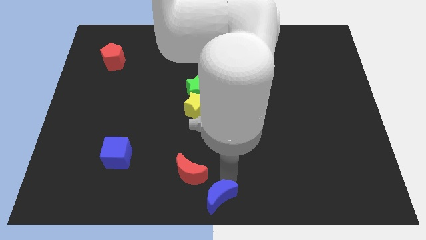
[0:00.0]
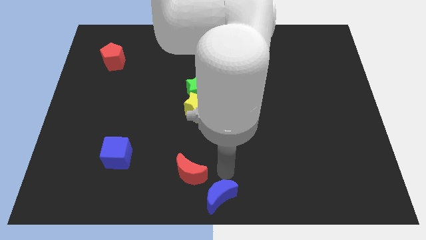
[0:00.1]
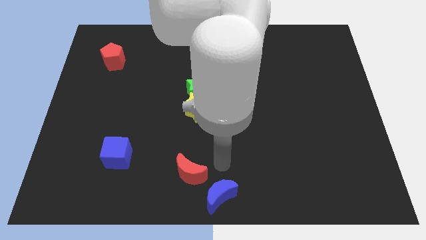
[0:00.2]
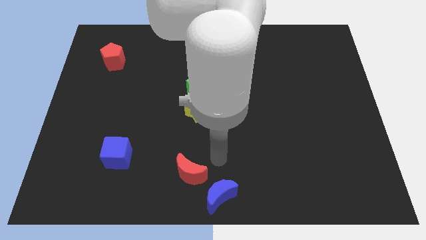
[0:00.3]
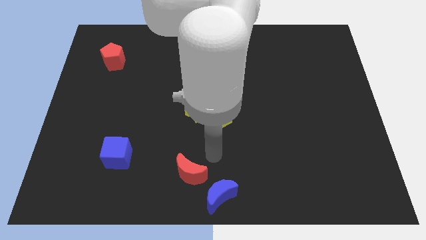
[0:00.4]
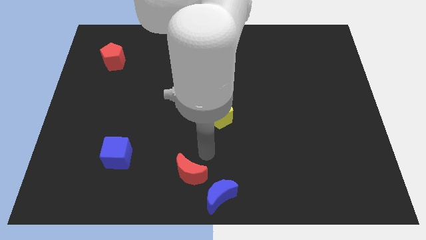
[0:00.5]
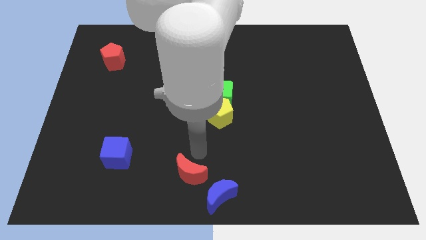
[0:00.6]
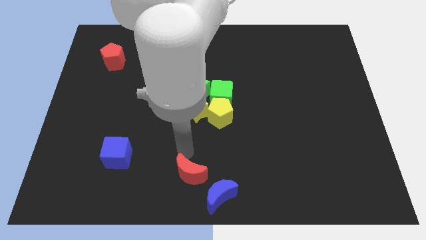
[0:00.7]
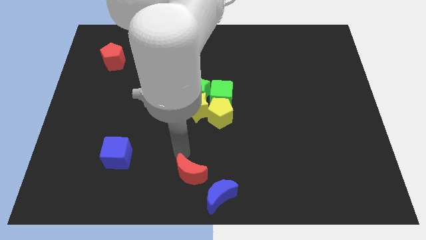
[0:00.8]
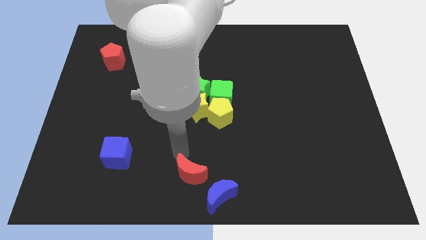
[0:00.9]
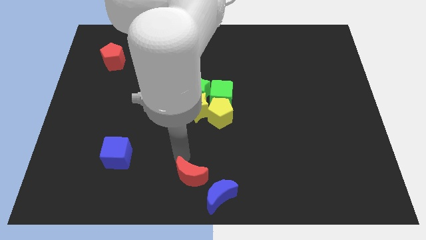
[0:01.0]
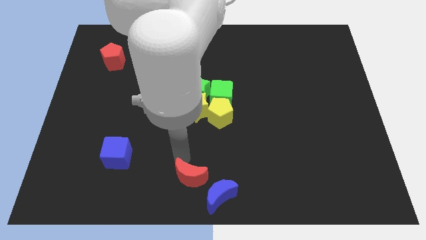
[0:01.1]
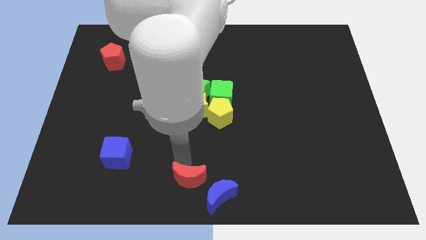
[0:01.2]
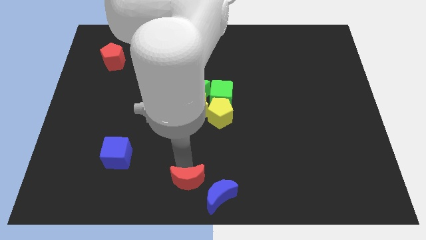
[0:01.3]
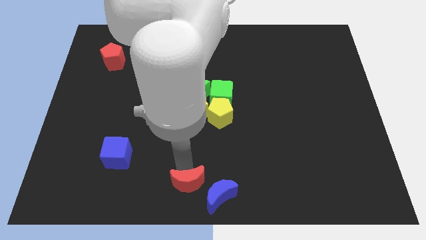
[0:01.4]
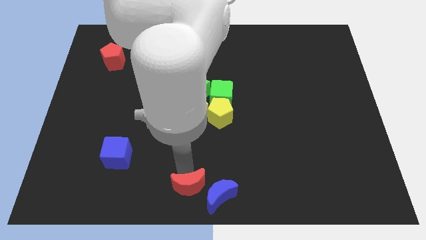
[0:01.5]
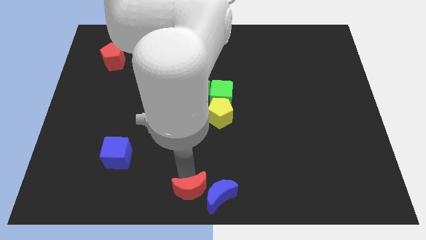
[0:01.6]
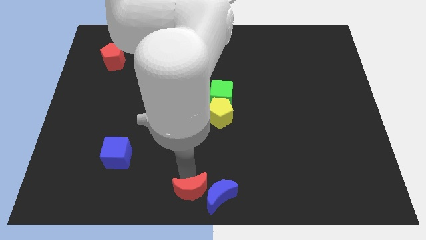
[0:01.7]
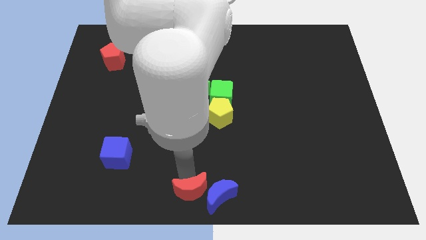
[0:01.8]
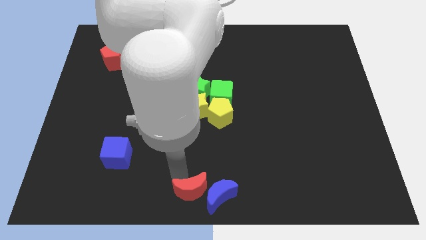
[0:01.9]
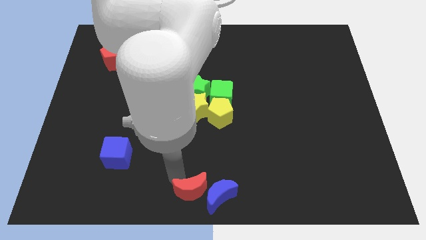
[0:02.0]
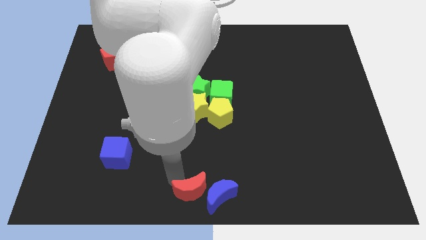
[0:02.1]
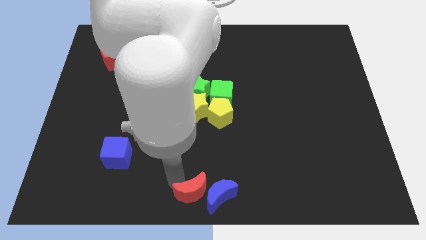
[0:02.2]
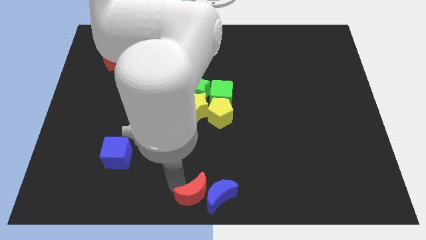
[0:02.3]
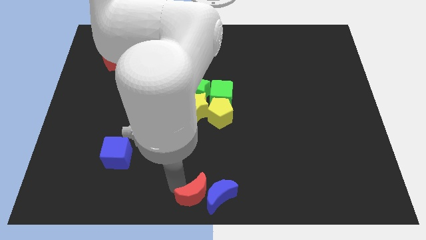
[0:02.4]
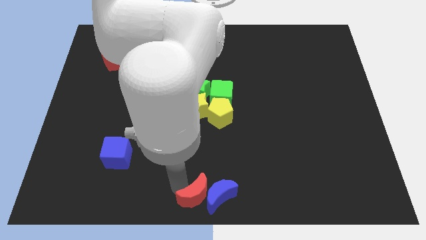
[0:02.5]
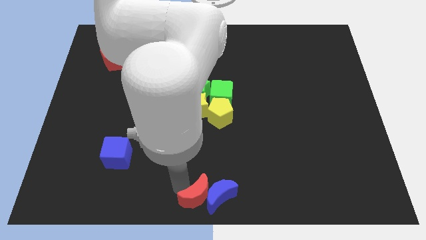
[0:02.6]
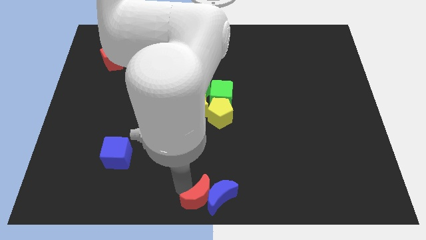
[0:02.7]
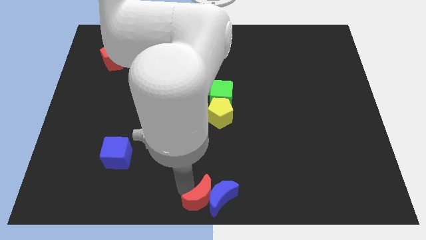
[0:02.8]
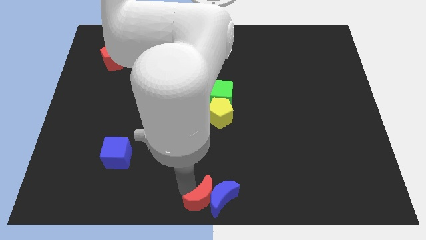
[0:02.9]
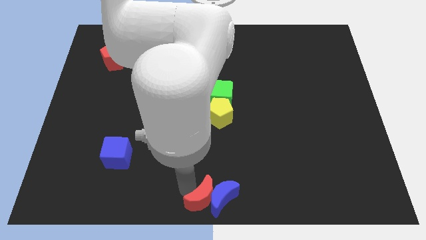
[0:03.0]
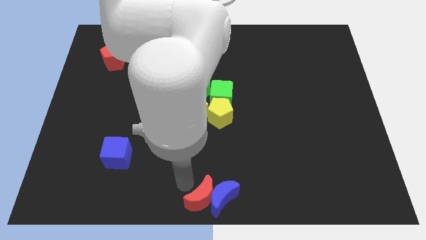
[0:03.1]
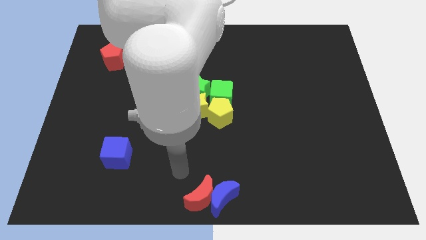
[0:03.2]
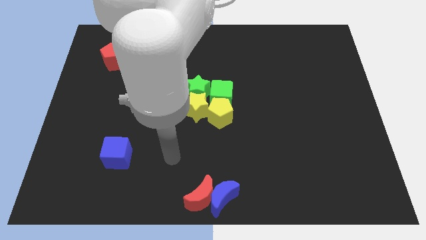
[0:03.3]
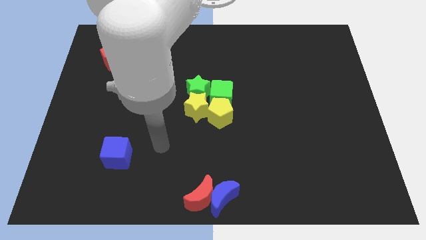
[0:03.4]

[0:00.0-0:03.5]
move the red moon into the blue moon

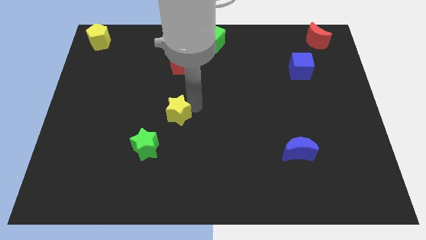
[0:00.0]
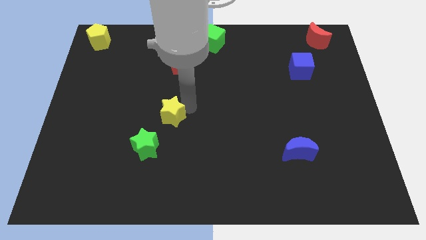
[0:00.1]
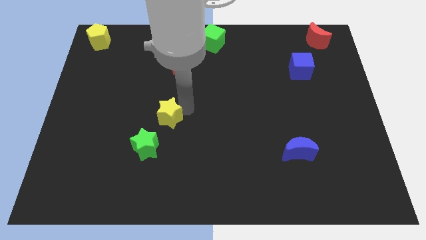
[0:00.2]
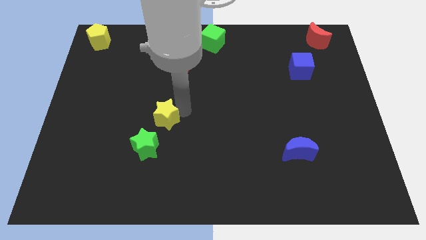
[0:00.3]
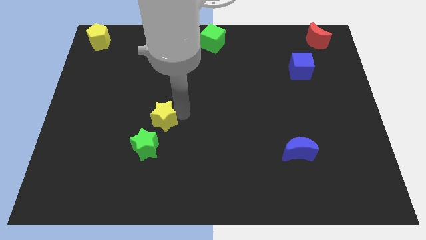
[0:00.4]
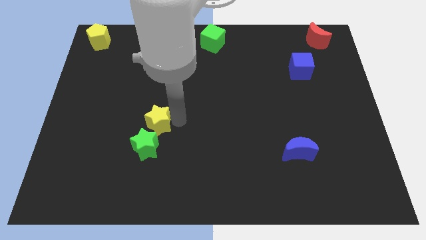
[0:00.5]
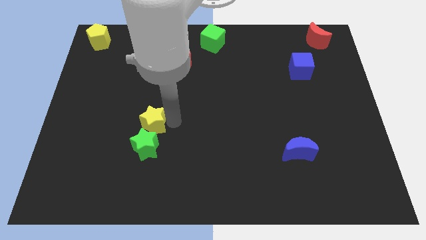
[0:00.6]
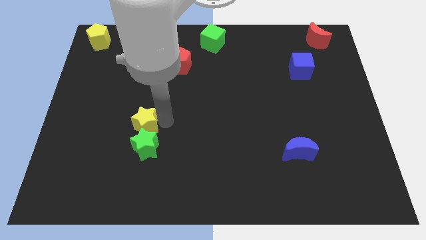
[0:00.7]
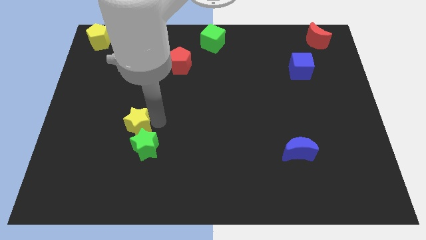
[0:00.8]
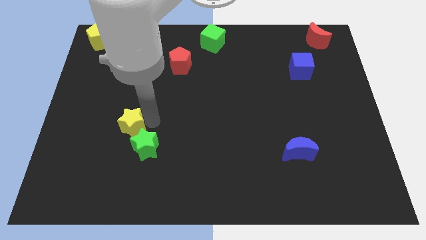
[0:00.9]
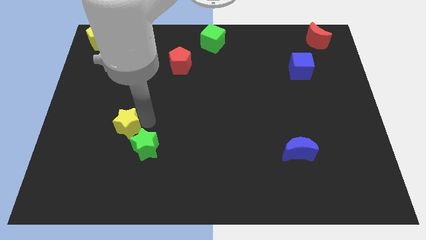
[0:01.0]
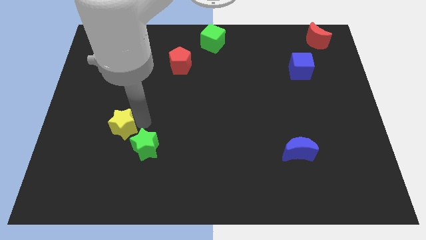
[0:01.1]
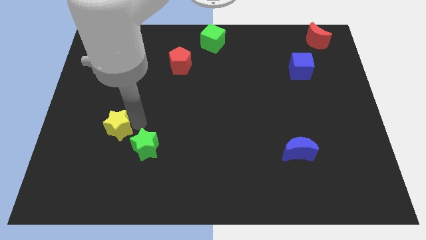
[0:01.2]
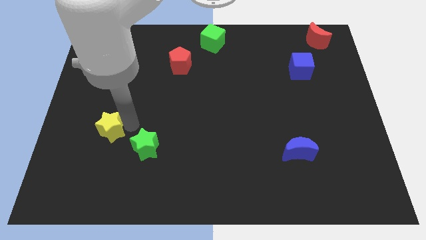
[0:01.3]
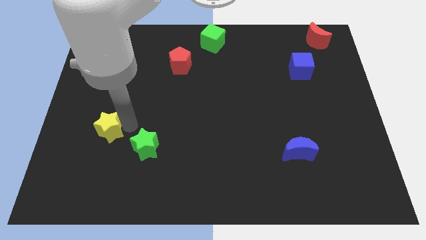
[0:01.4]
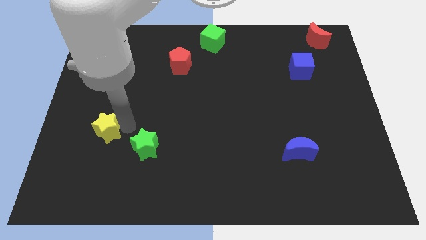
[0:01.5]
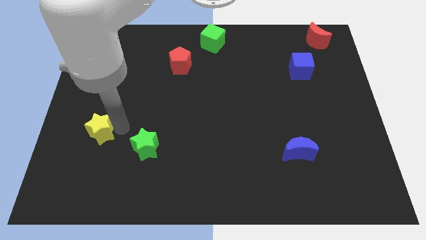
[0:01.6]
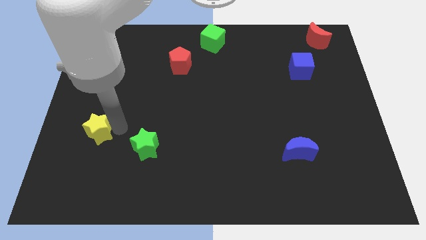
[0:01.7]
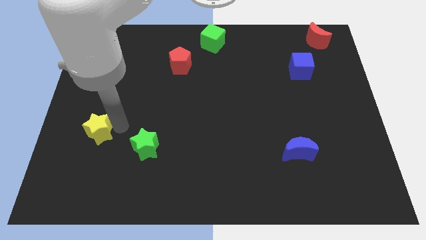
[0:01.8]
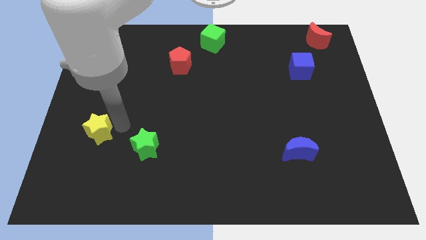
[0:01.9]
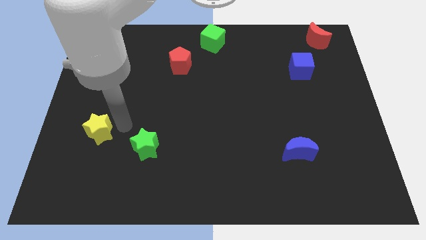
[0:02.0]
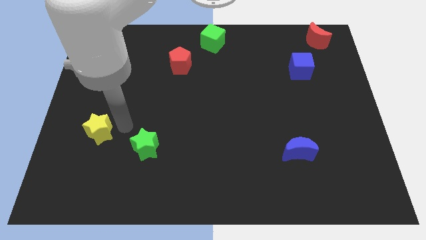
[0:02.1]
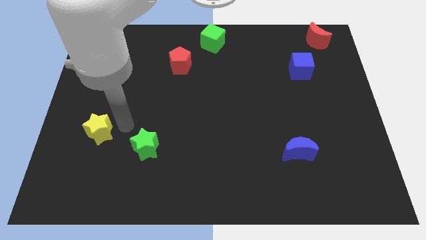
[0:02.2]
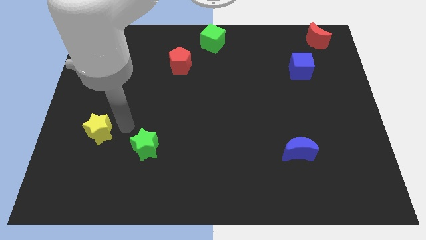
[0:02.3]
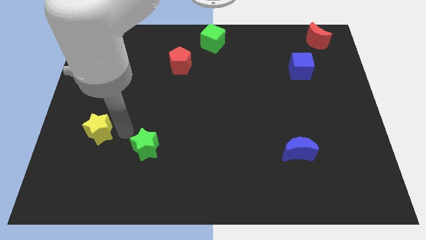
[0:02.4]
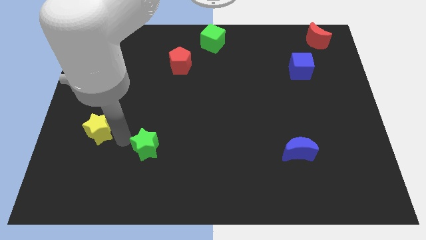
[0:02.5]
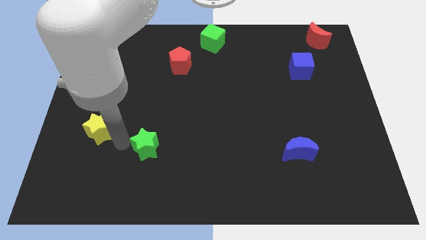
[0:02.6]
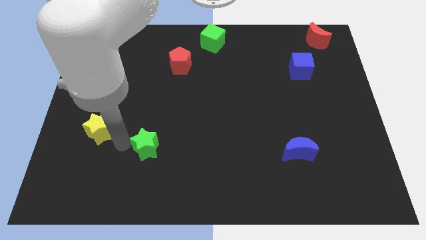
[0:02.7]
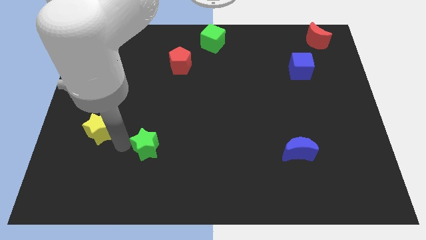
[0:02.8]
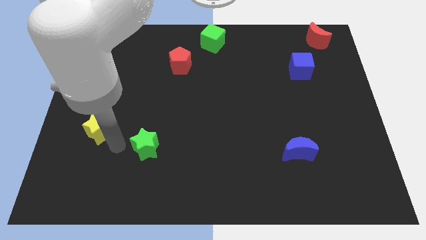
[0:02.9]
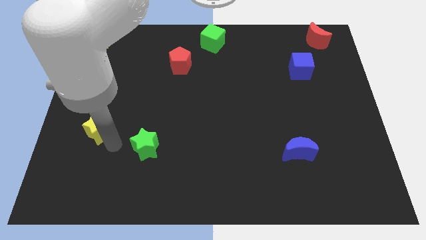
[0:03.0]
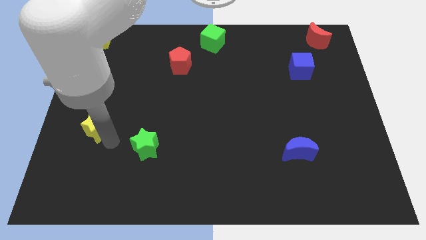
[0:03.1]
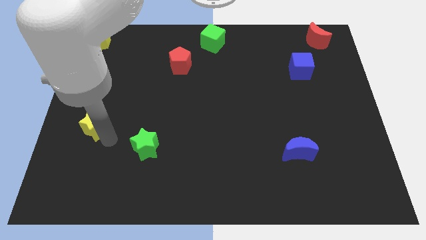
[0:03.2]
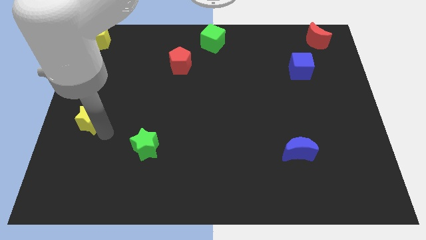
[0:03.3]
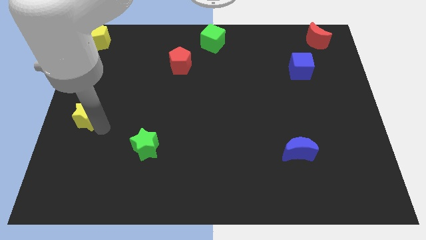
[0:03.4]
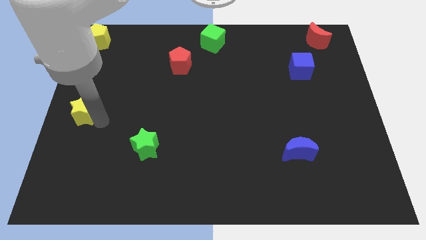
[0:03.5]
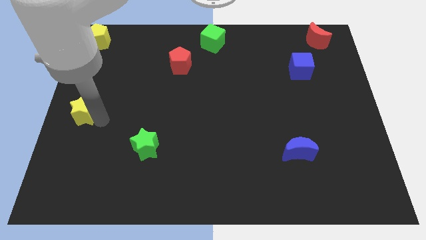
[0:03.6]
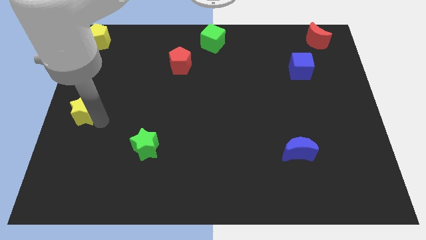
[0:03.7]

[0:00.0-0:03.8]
push the yellow star to the left center of the board

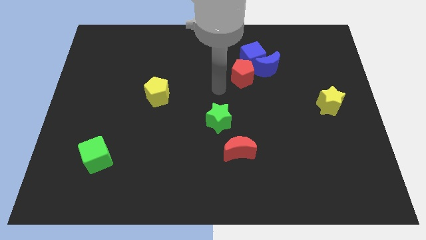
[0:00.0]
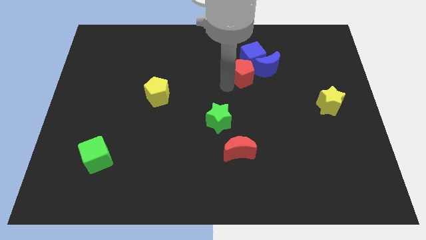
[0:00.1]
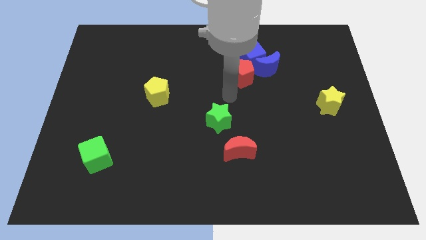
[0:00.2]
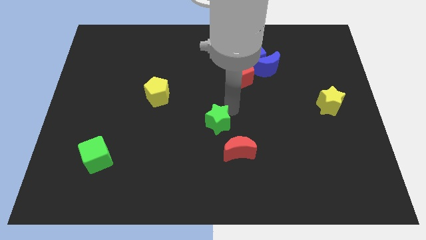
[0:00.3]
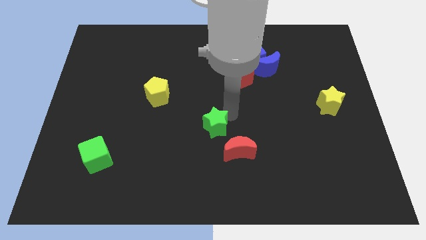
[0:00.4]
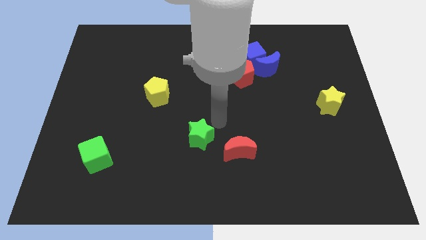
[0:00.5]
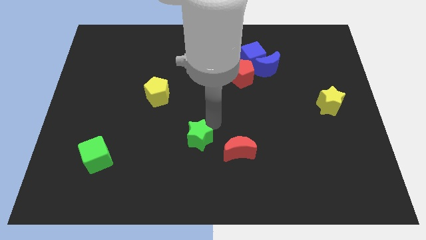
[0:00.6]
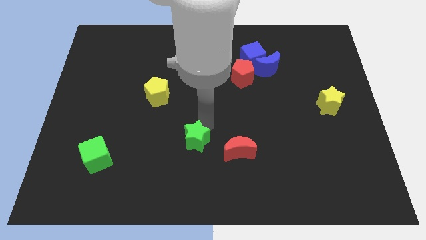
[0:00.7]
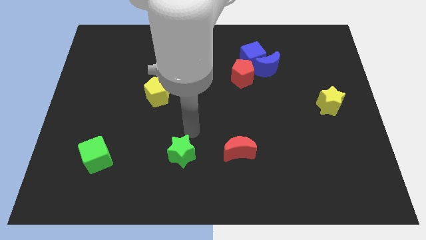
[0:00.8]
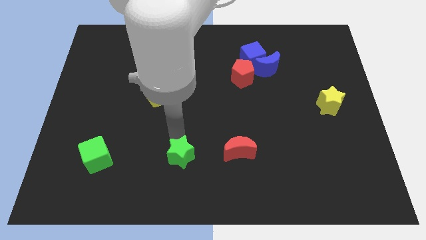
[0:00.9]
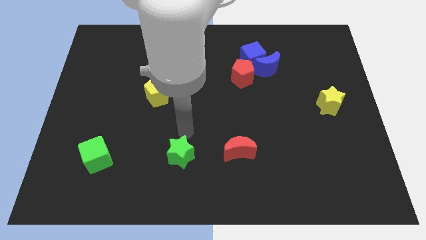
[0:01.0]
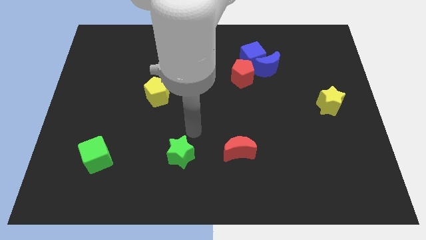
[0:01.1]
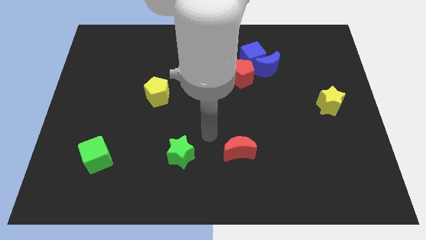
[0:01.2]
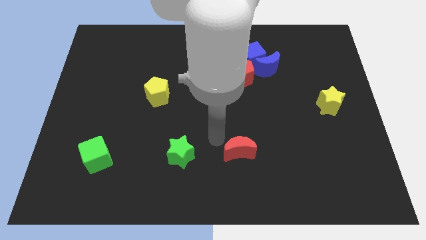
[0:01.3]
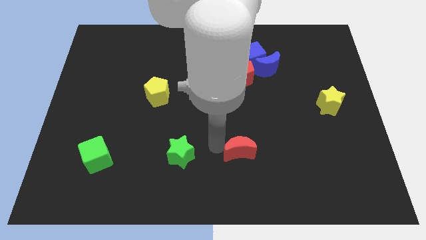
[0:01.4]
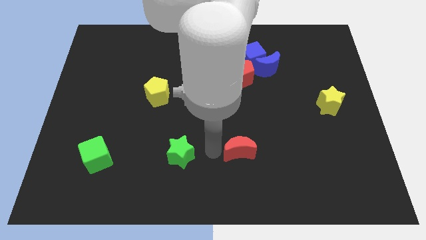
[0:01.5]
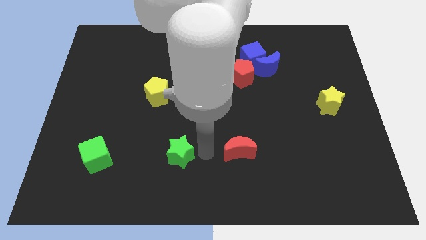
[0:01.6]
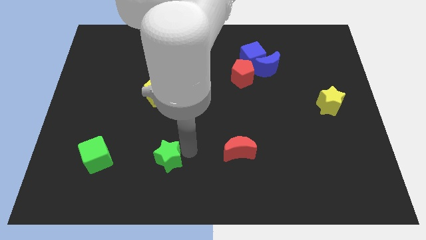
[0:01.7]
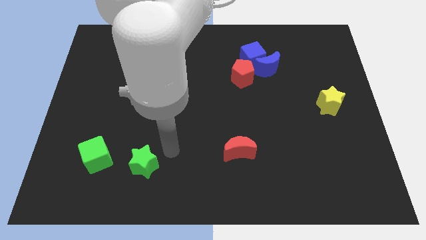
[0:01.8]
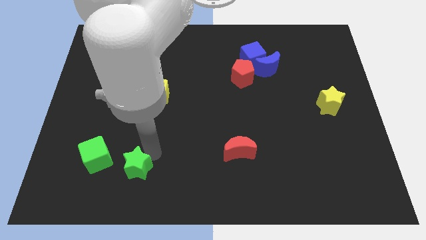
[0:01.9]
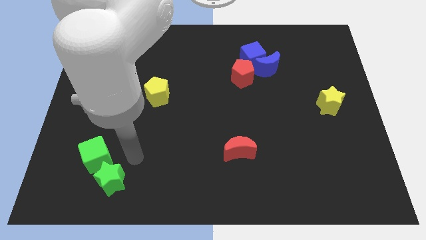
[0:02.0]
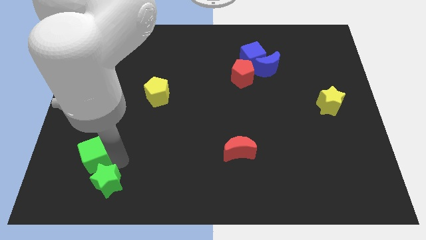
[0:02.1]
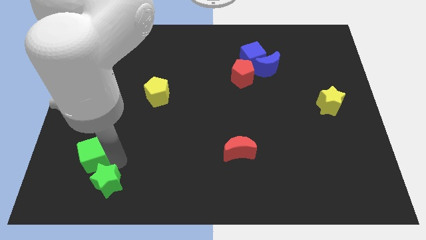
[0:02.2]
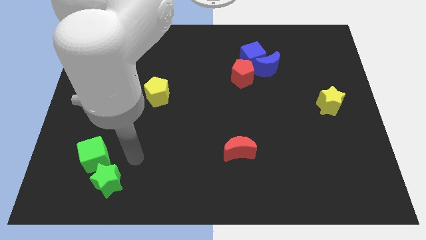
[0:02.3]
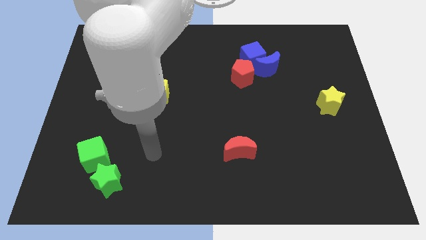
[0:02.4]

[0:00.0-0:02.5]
place the green star below the green cube
